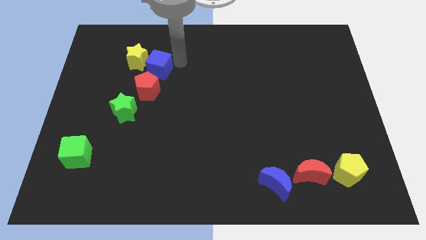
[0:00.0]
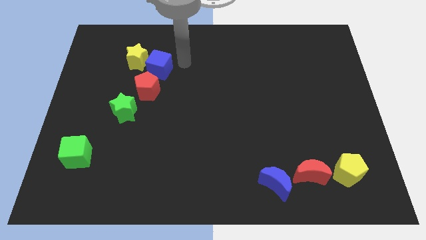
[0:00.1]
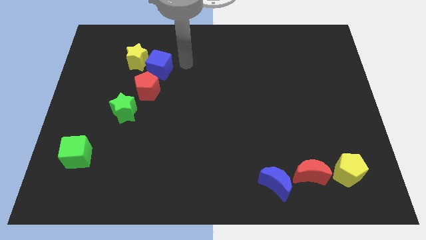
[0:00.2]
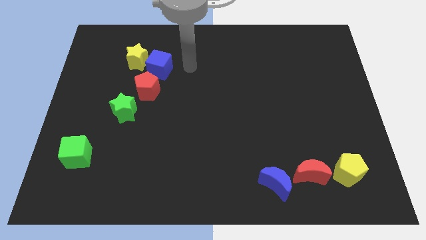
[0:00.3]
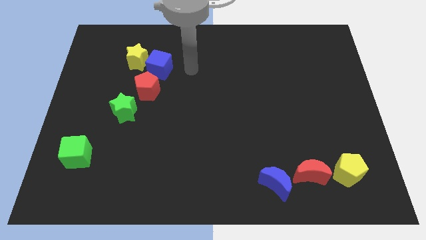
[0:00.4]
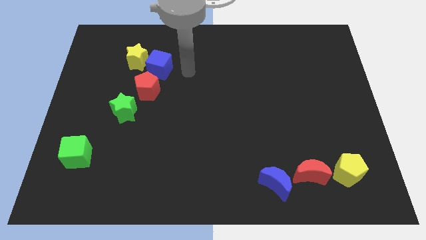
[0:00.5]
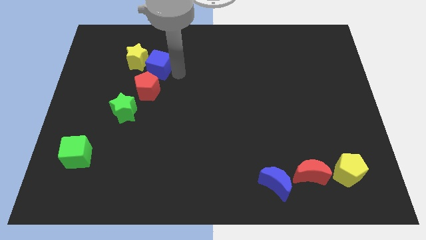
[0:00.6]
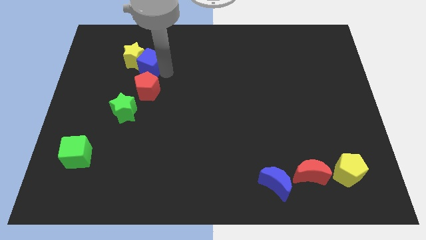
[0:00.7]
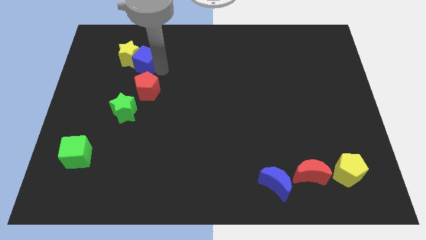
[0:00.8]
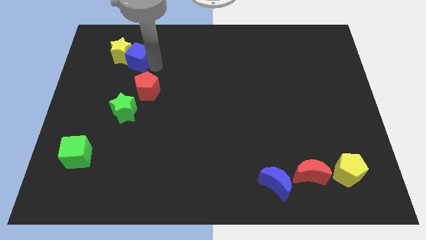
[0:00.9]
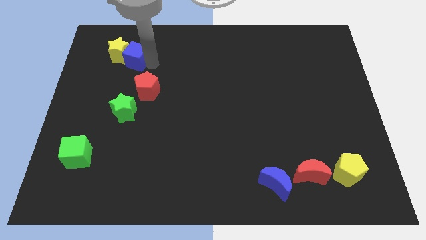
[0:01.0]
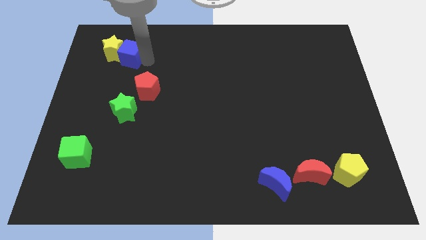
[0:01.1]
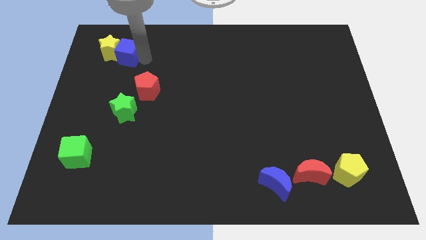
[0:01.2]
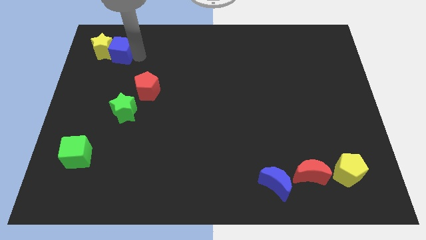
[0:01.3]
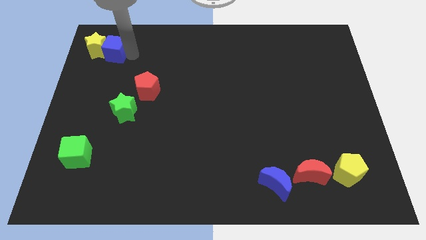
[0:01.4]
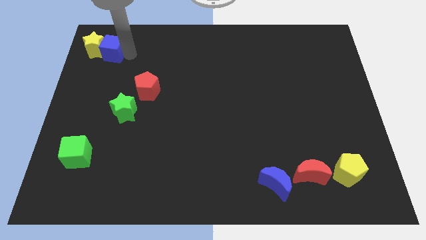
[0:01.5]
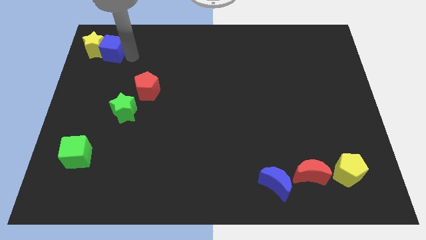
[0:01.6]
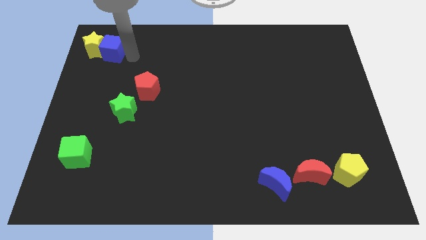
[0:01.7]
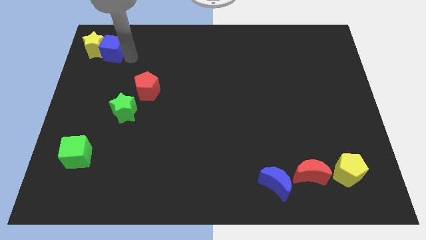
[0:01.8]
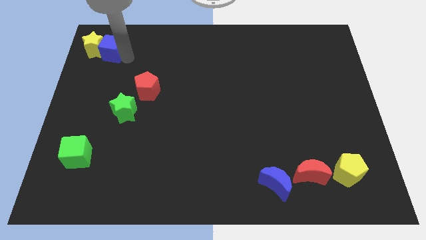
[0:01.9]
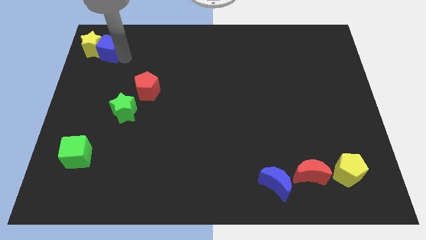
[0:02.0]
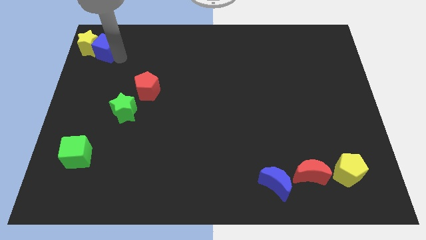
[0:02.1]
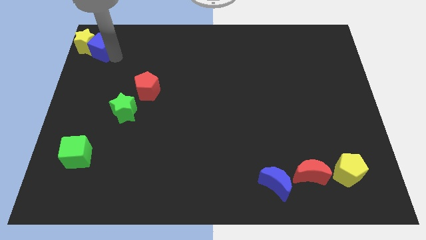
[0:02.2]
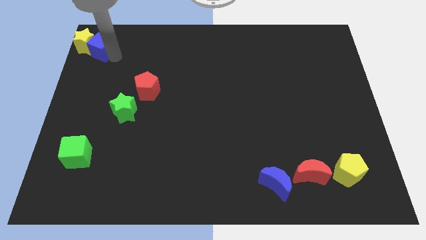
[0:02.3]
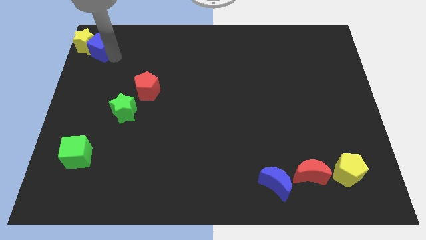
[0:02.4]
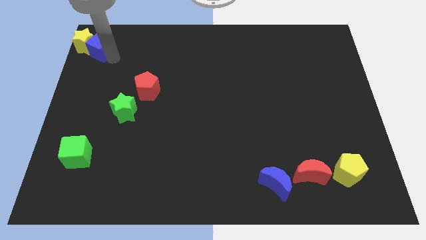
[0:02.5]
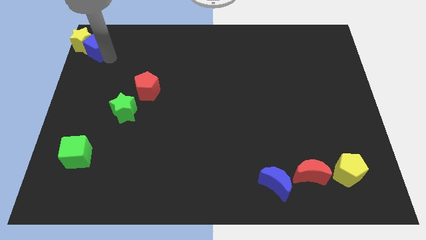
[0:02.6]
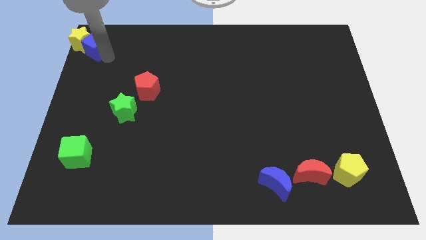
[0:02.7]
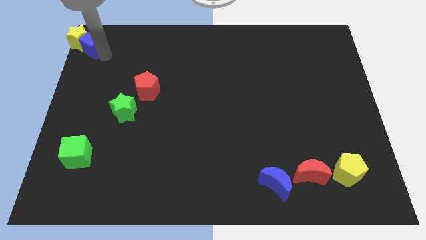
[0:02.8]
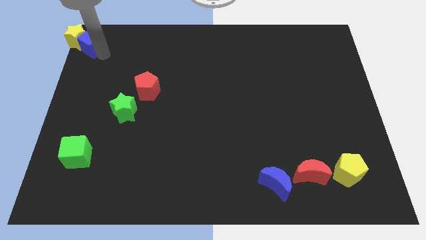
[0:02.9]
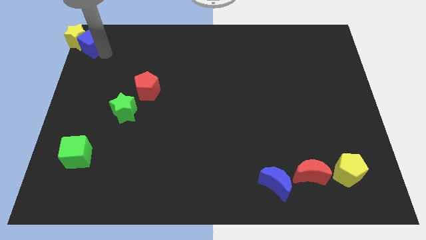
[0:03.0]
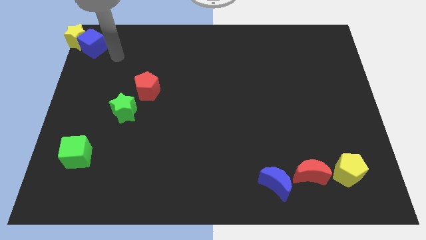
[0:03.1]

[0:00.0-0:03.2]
move the blue cube along with the yellow star to the top left corner of the board

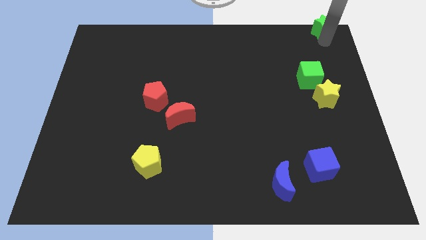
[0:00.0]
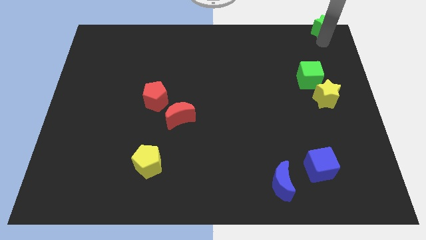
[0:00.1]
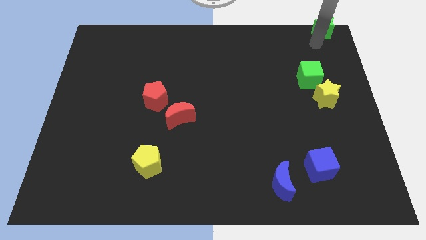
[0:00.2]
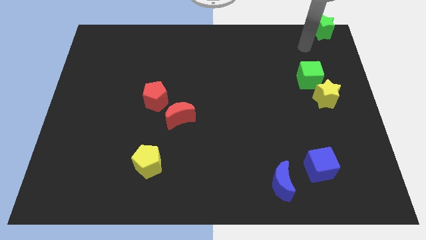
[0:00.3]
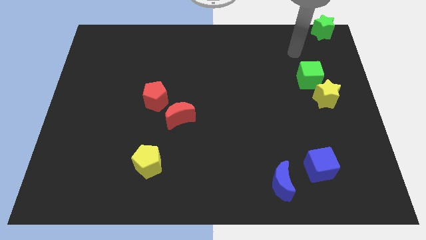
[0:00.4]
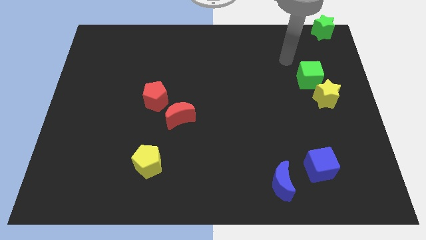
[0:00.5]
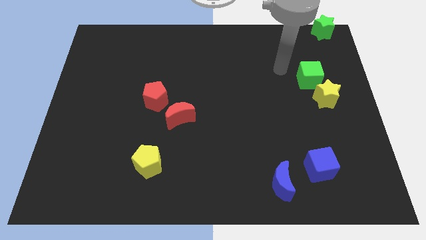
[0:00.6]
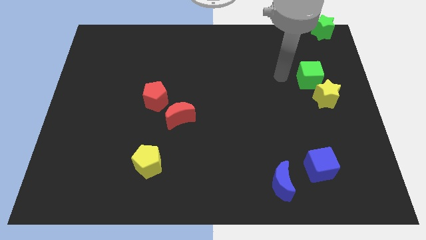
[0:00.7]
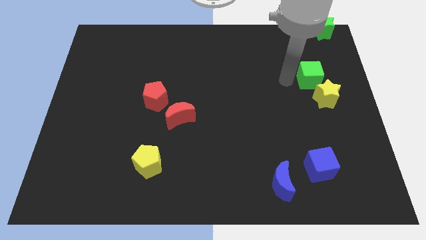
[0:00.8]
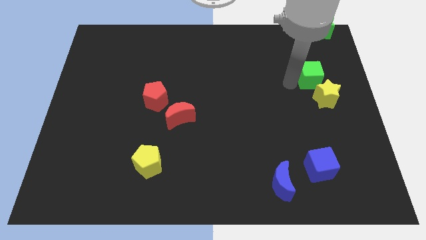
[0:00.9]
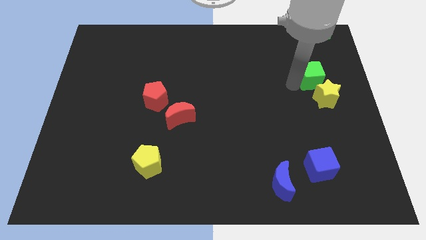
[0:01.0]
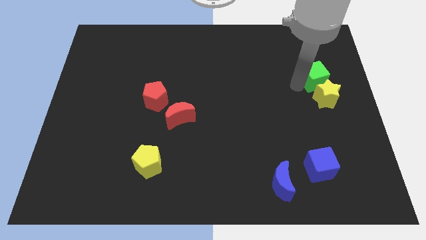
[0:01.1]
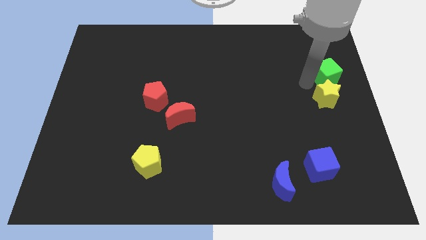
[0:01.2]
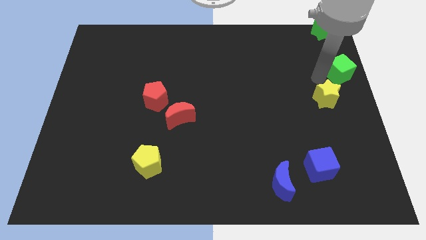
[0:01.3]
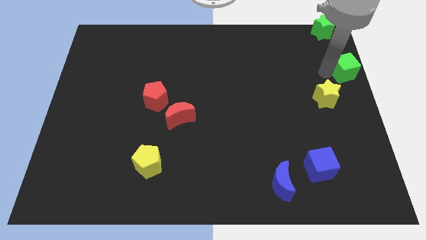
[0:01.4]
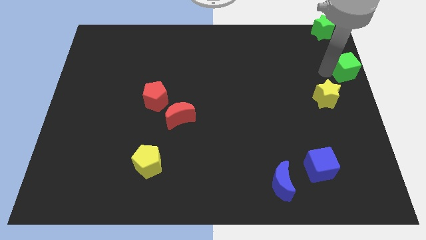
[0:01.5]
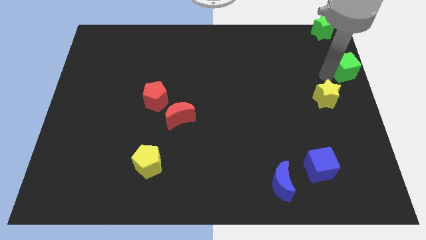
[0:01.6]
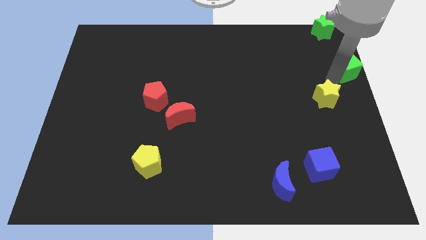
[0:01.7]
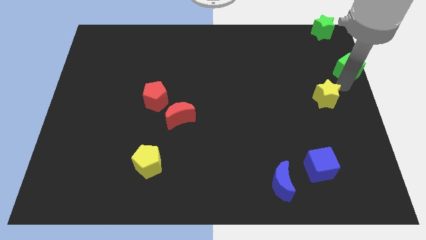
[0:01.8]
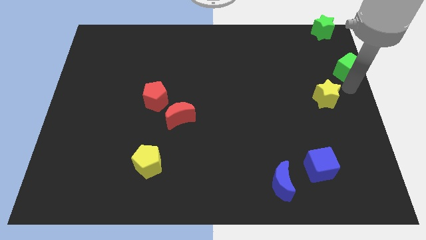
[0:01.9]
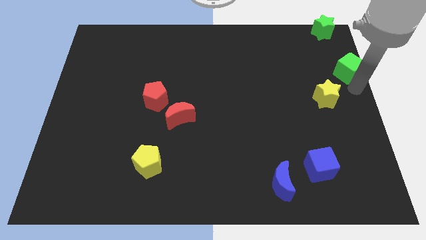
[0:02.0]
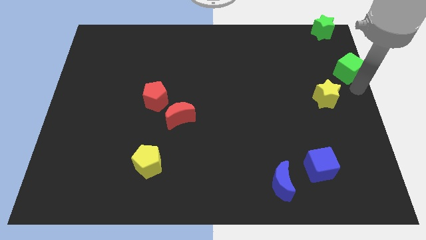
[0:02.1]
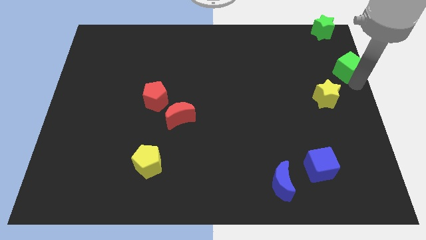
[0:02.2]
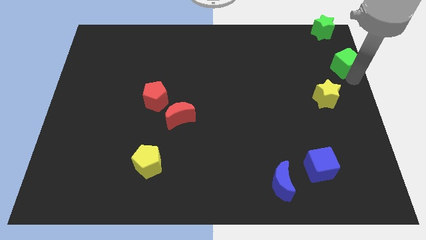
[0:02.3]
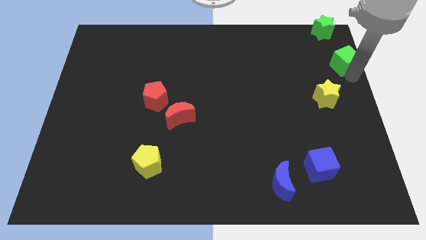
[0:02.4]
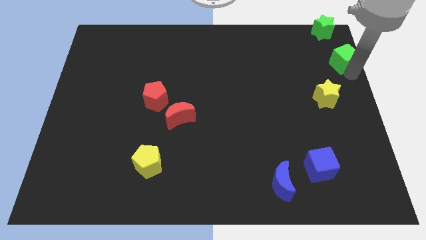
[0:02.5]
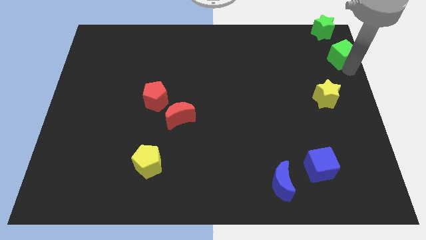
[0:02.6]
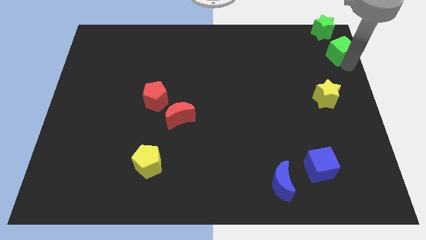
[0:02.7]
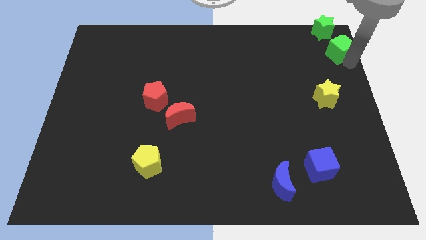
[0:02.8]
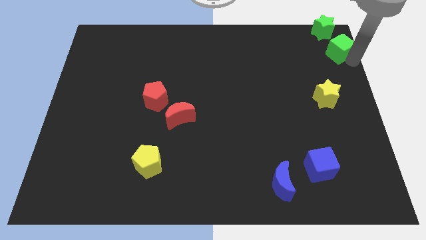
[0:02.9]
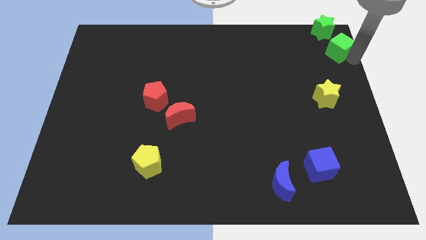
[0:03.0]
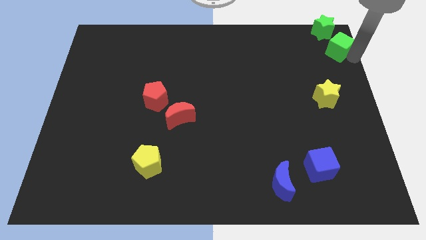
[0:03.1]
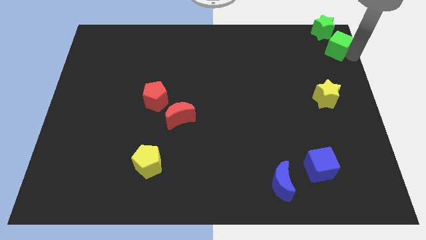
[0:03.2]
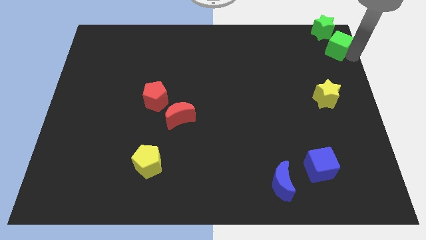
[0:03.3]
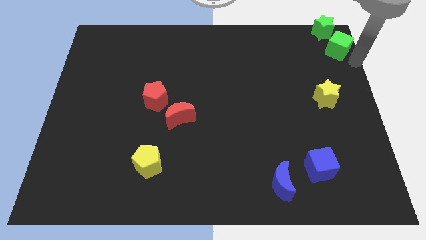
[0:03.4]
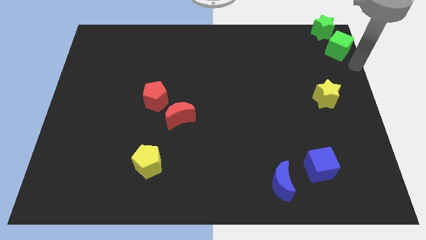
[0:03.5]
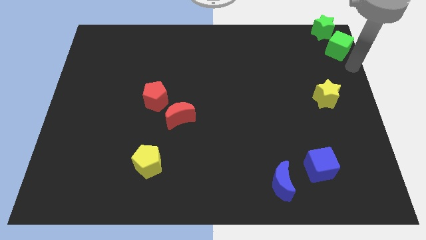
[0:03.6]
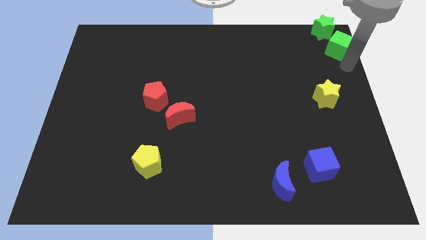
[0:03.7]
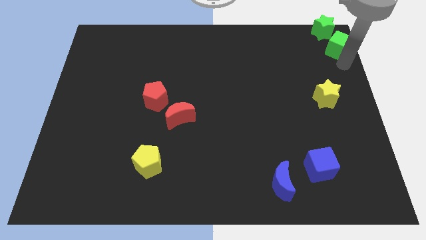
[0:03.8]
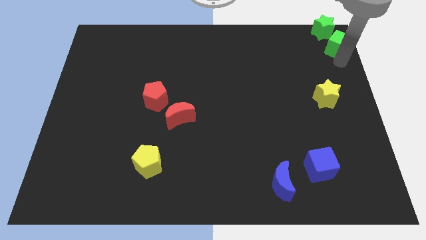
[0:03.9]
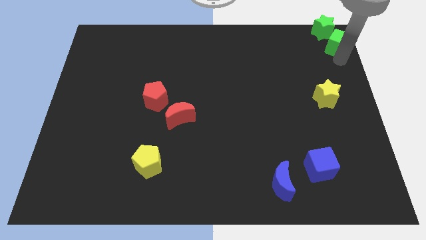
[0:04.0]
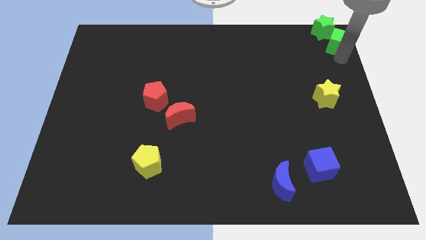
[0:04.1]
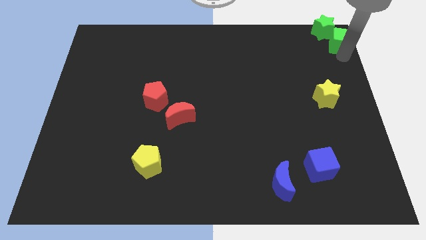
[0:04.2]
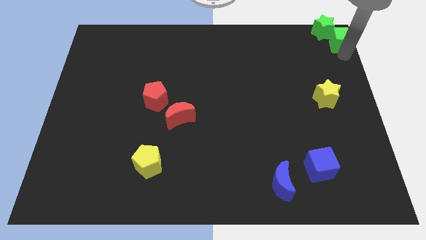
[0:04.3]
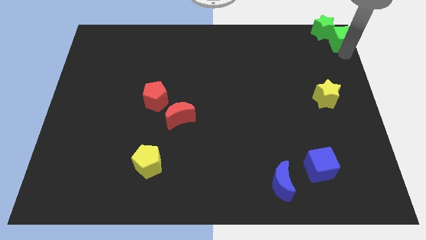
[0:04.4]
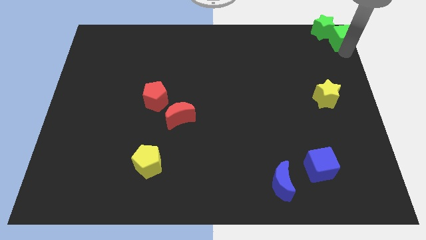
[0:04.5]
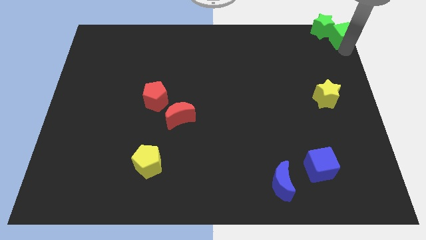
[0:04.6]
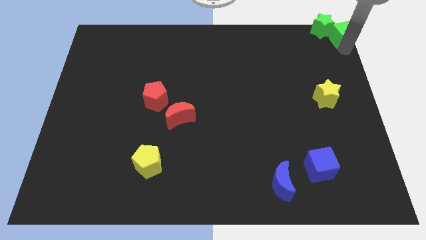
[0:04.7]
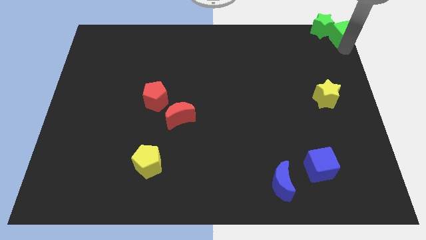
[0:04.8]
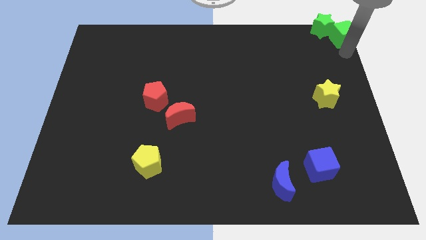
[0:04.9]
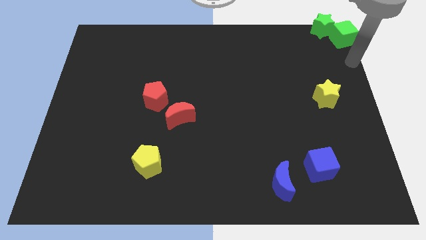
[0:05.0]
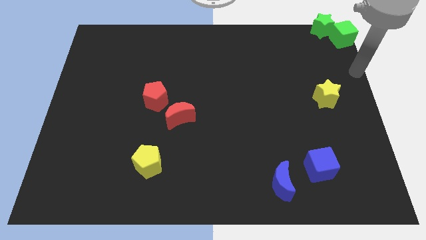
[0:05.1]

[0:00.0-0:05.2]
move the green cube into the green star

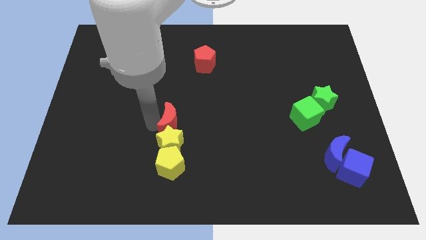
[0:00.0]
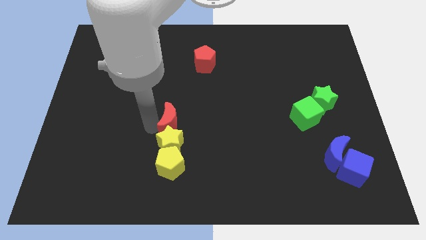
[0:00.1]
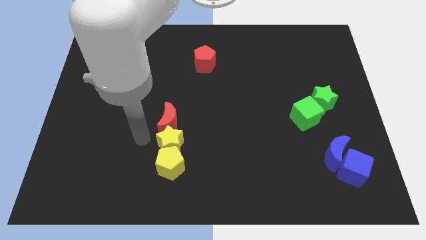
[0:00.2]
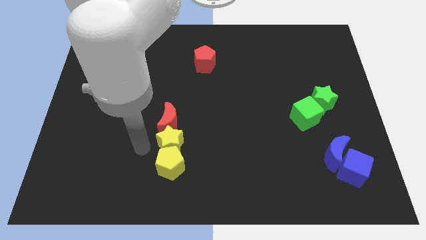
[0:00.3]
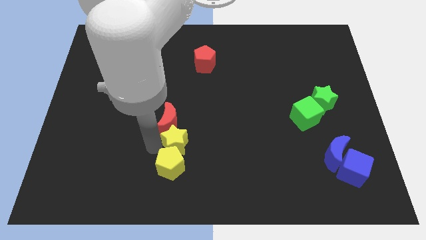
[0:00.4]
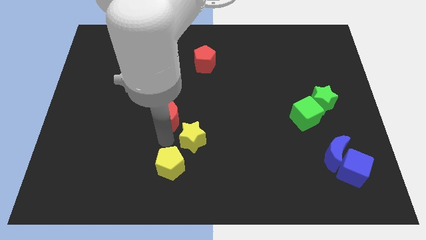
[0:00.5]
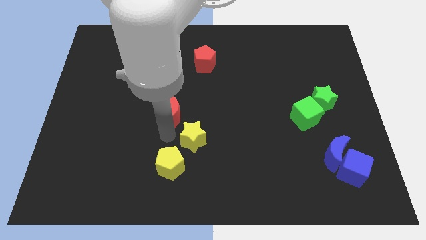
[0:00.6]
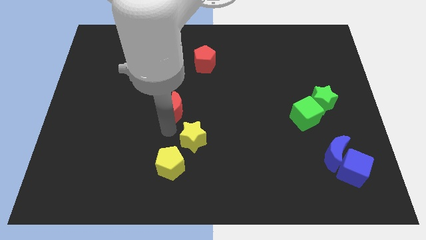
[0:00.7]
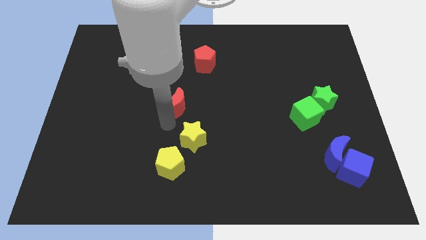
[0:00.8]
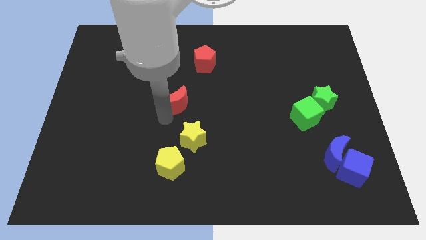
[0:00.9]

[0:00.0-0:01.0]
separate the yellow star and red moon from each other
